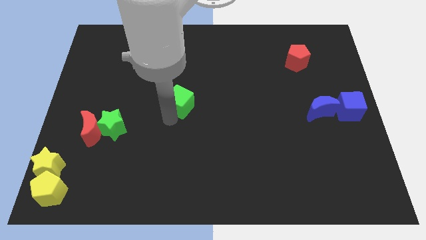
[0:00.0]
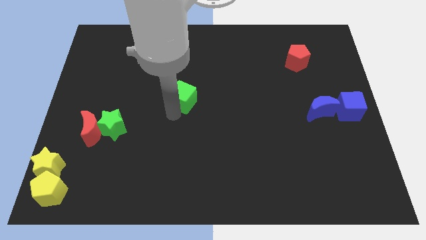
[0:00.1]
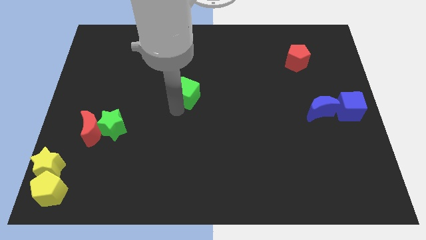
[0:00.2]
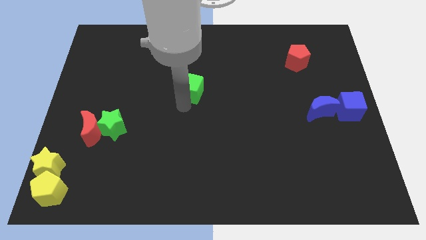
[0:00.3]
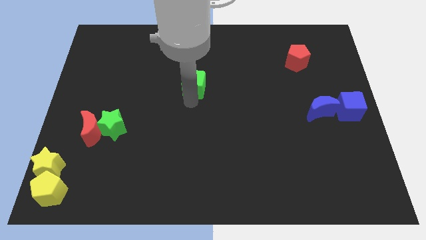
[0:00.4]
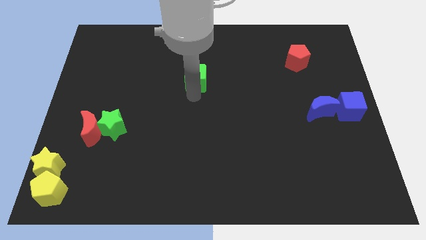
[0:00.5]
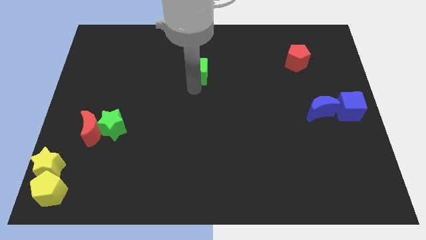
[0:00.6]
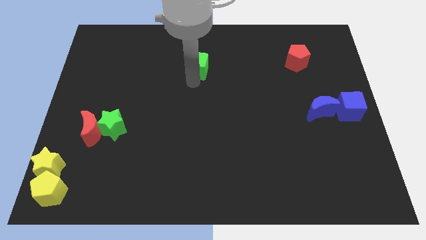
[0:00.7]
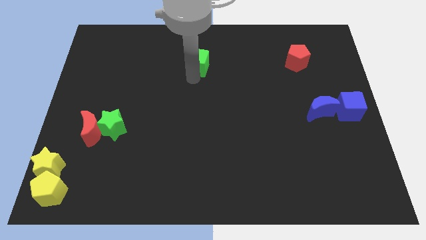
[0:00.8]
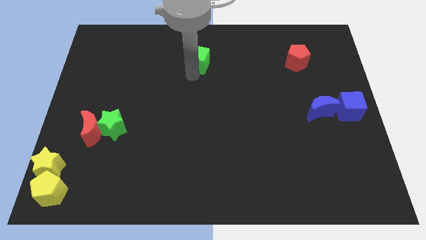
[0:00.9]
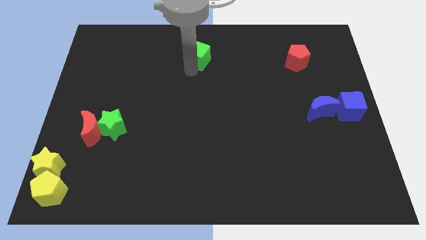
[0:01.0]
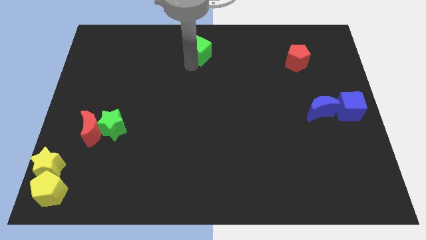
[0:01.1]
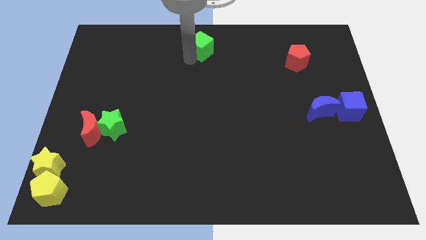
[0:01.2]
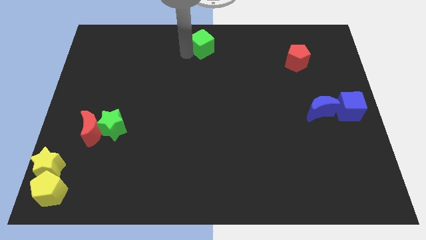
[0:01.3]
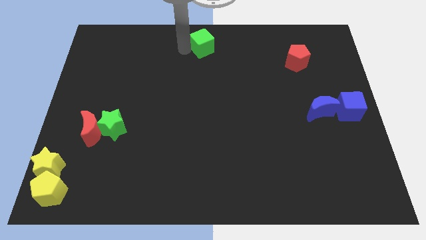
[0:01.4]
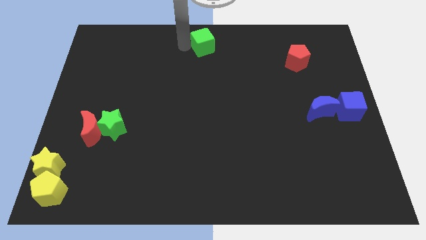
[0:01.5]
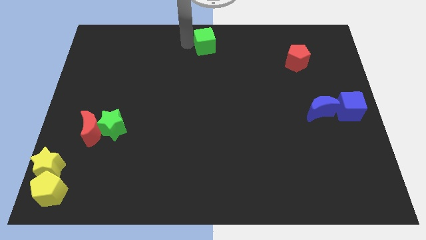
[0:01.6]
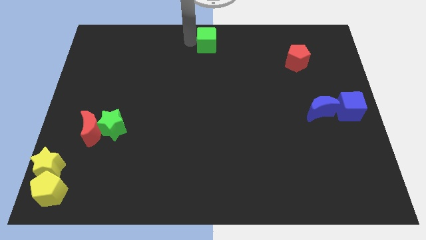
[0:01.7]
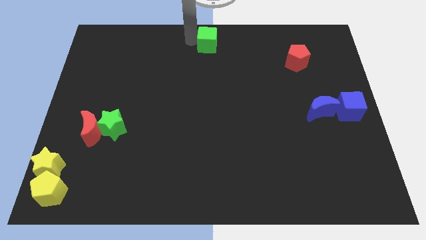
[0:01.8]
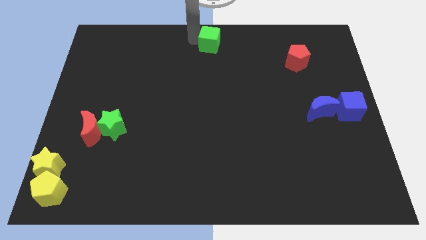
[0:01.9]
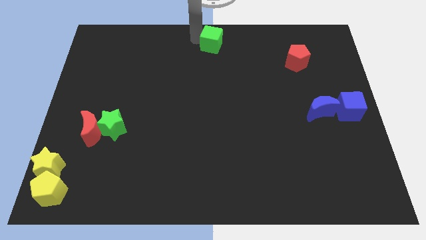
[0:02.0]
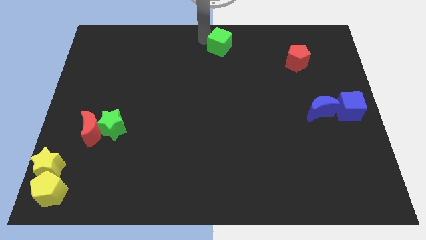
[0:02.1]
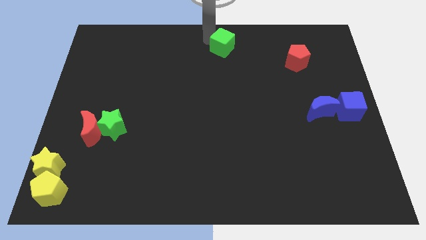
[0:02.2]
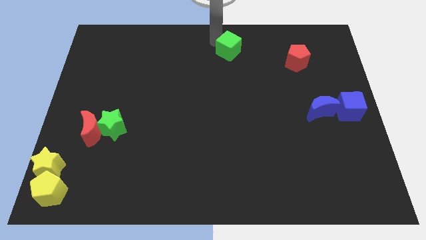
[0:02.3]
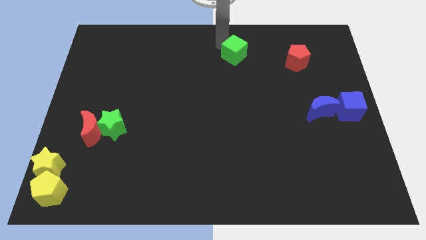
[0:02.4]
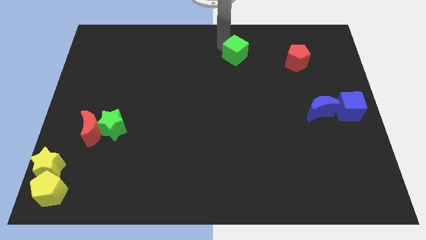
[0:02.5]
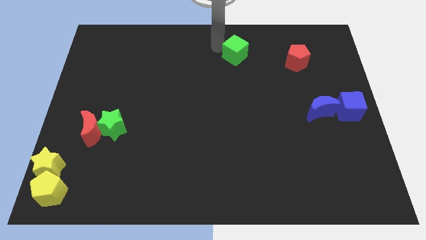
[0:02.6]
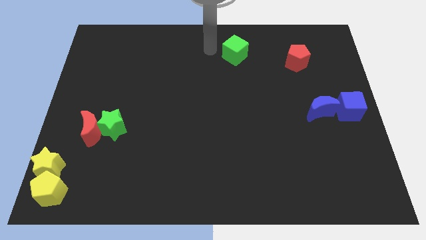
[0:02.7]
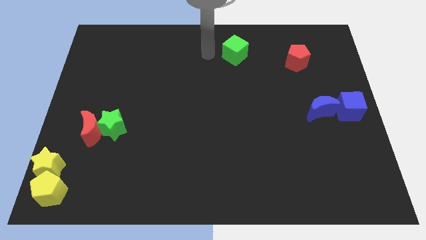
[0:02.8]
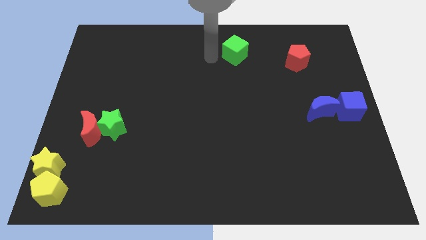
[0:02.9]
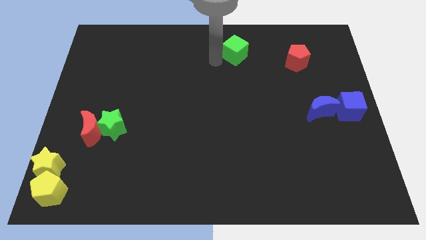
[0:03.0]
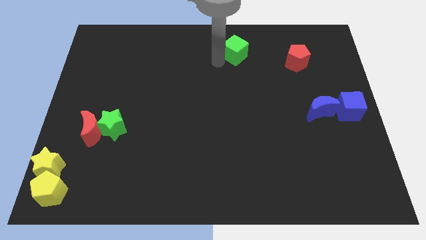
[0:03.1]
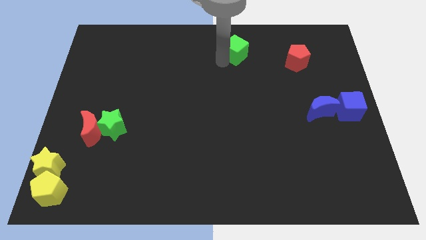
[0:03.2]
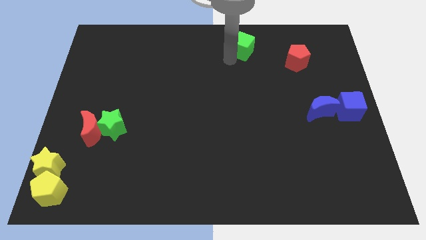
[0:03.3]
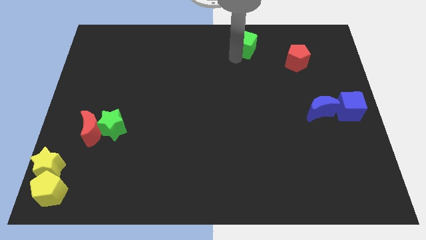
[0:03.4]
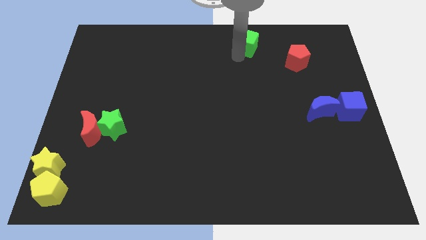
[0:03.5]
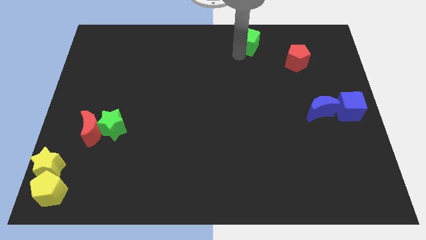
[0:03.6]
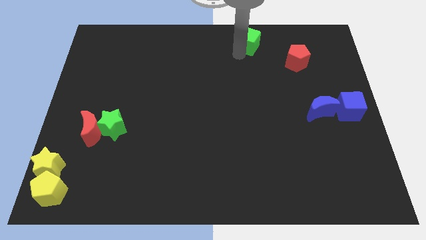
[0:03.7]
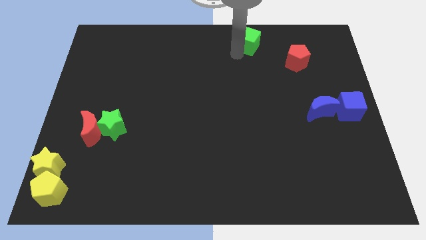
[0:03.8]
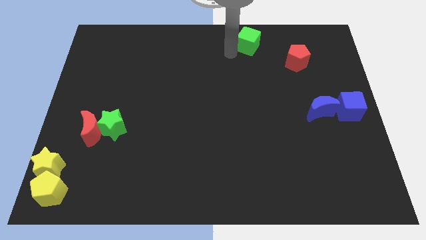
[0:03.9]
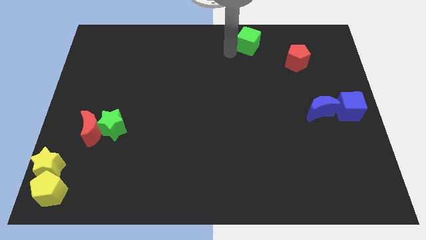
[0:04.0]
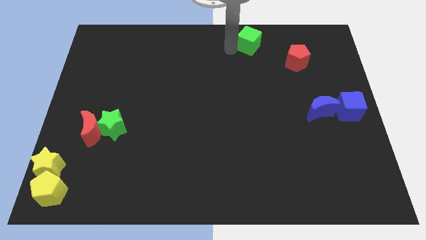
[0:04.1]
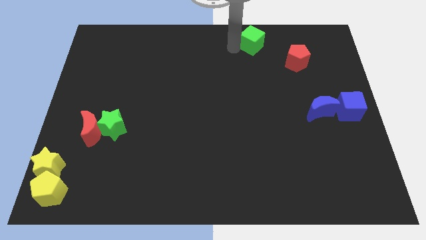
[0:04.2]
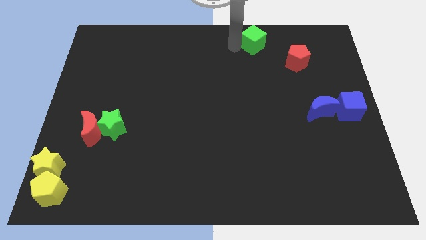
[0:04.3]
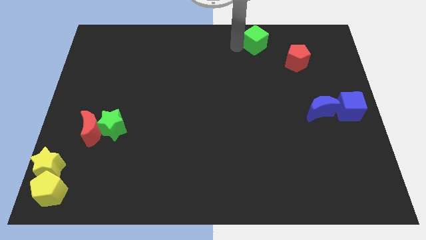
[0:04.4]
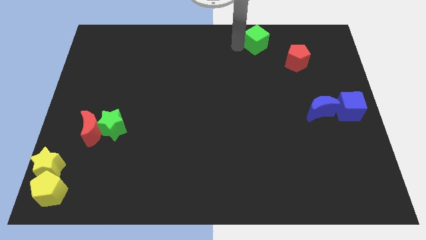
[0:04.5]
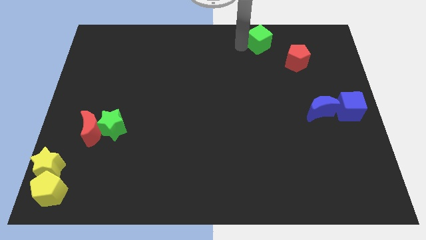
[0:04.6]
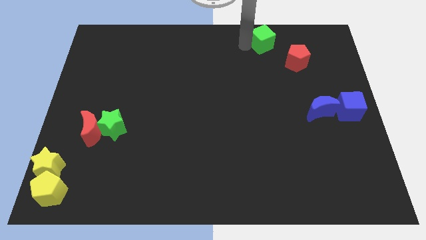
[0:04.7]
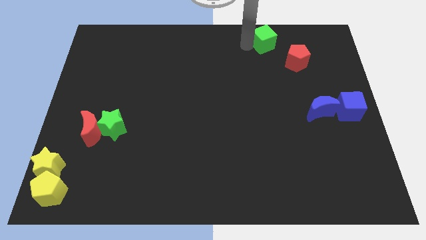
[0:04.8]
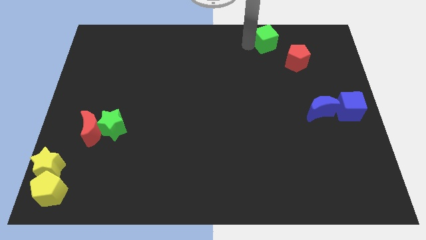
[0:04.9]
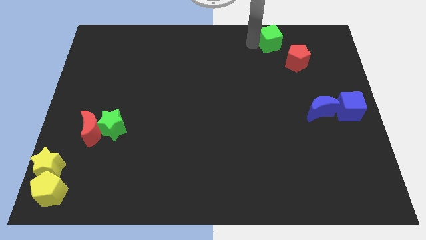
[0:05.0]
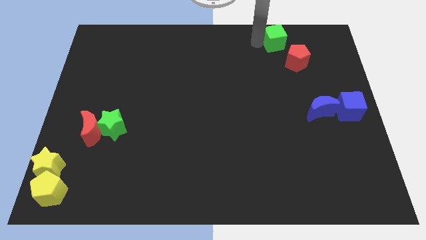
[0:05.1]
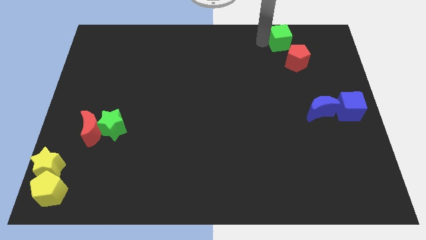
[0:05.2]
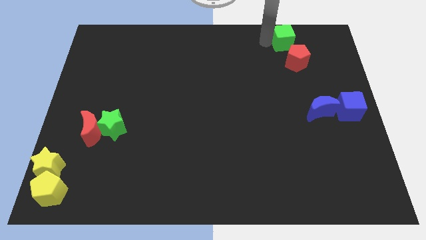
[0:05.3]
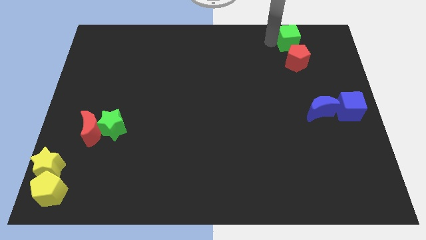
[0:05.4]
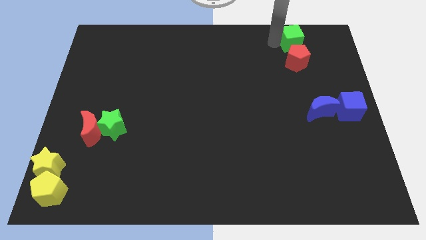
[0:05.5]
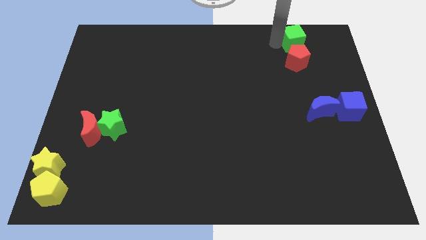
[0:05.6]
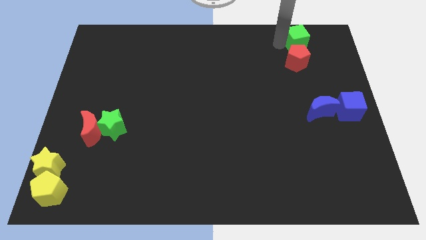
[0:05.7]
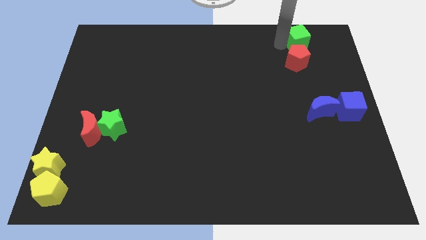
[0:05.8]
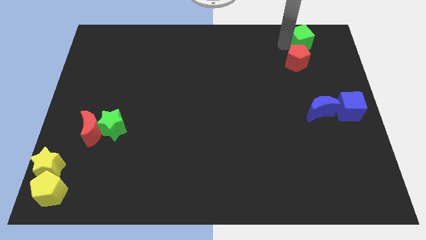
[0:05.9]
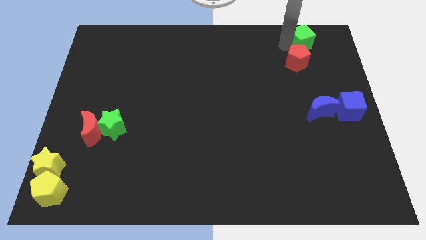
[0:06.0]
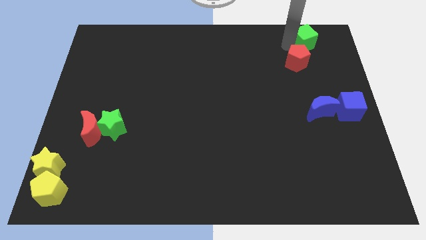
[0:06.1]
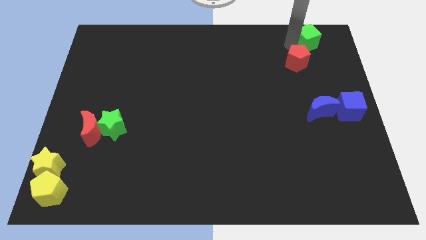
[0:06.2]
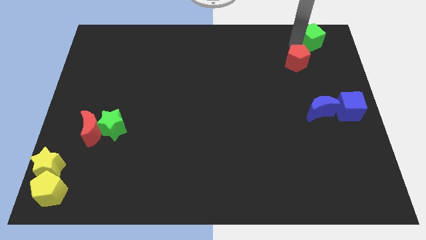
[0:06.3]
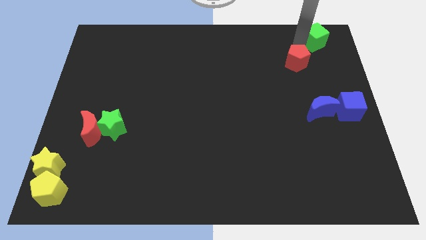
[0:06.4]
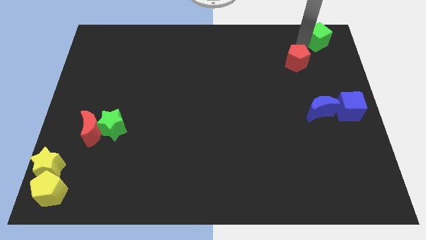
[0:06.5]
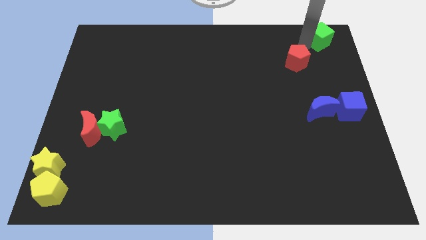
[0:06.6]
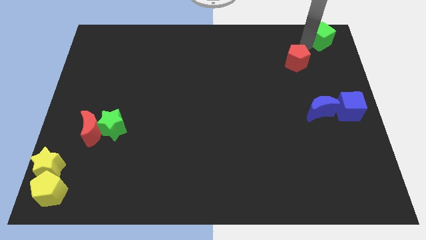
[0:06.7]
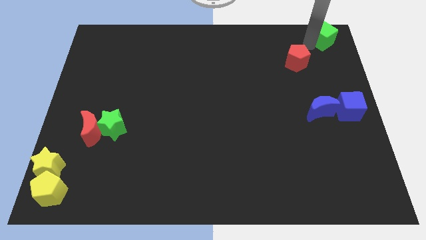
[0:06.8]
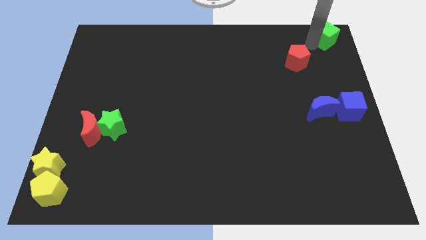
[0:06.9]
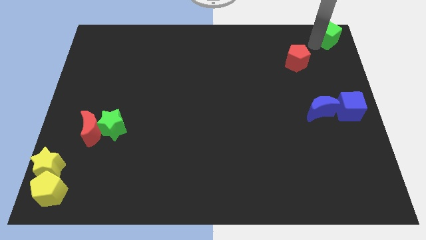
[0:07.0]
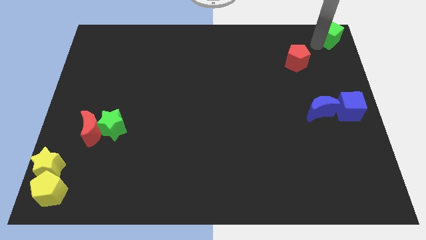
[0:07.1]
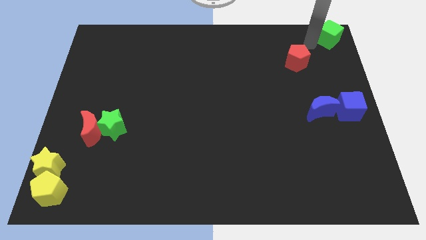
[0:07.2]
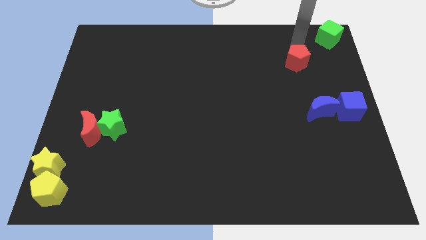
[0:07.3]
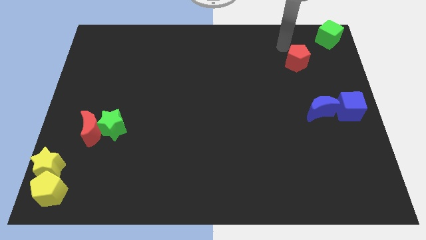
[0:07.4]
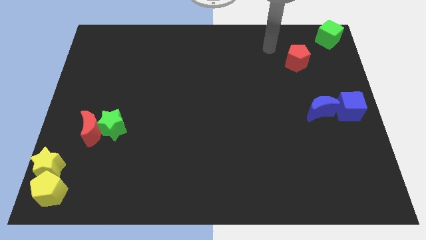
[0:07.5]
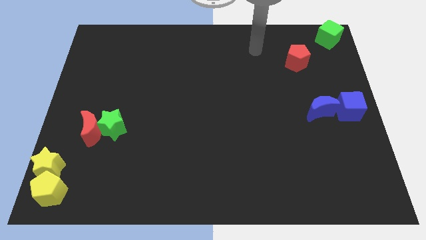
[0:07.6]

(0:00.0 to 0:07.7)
place the green cube towards the top right corner of the board

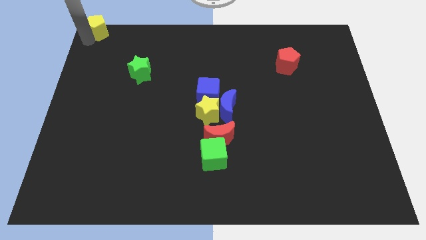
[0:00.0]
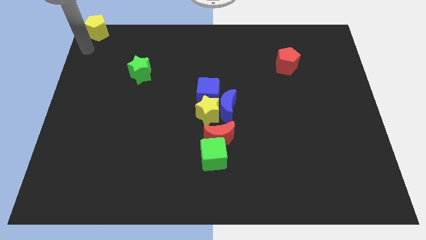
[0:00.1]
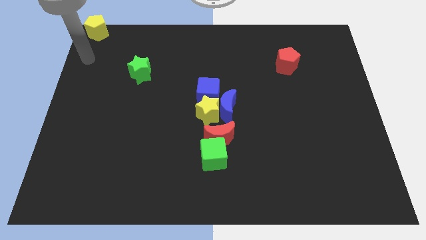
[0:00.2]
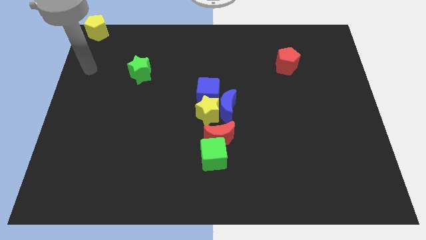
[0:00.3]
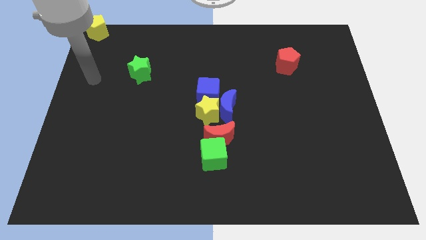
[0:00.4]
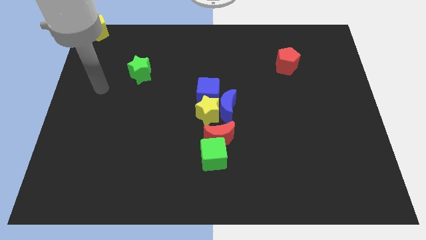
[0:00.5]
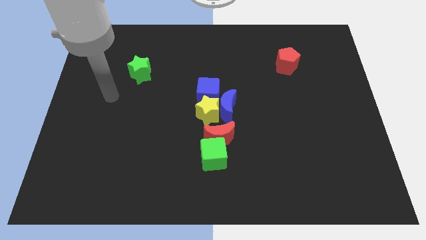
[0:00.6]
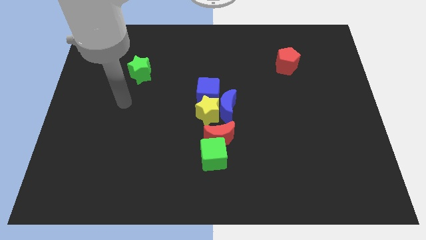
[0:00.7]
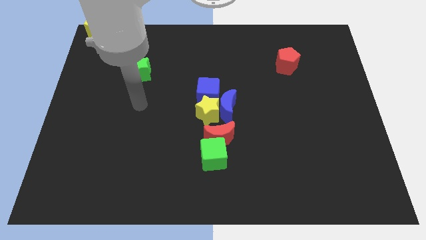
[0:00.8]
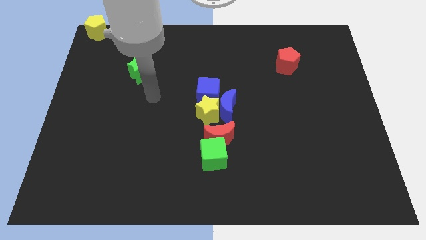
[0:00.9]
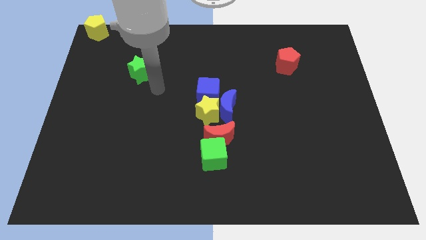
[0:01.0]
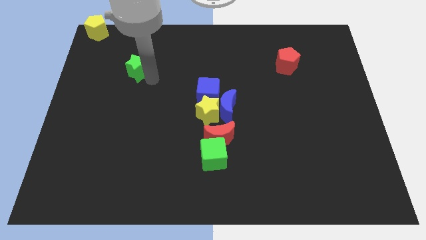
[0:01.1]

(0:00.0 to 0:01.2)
point your arm at the right of the green star

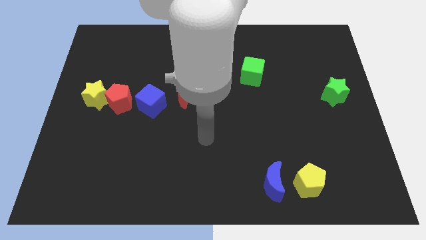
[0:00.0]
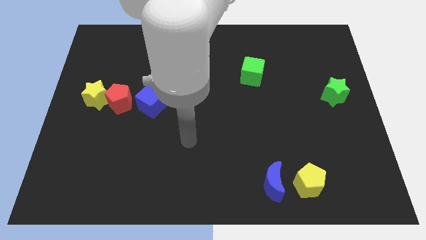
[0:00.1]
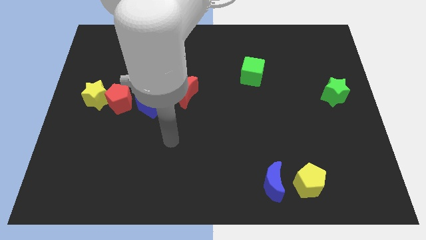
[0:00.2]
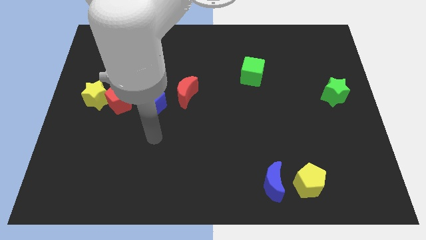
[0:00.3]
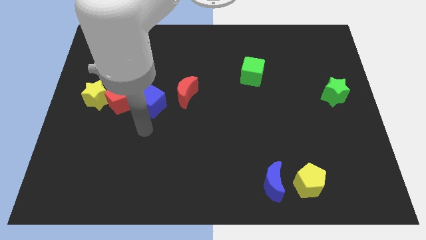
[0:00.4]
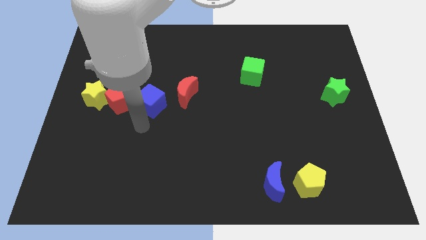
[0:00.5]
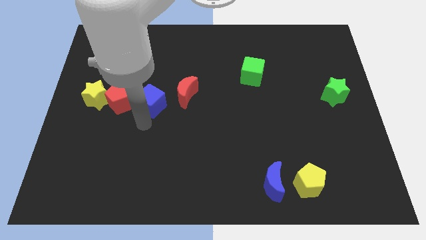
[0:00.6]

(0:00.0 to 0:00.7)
place the arm down to the blue cube
